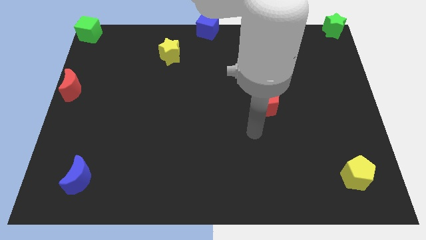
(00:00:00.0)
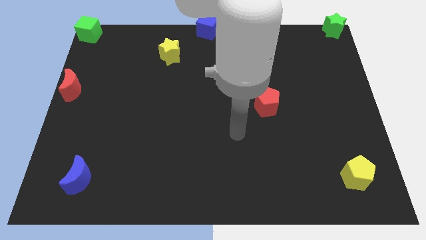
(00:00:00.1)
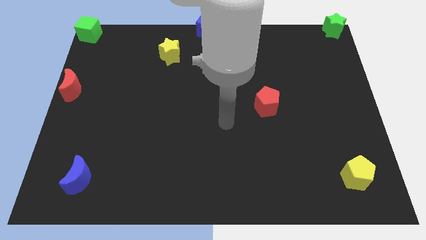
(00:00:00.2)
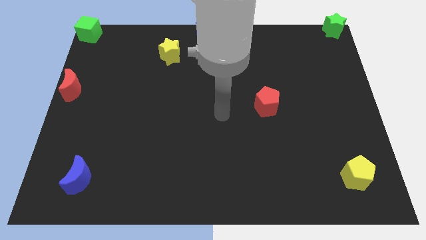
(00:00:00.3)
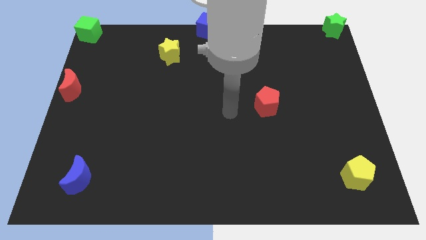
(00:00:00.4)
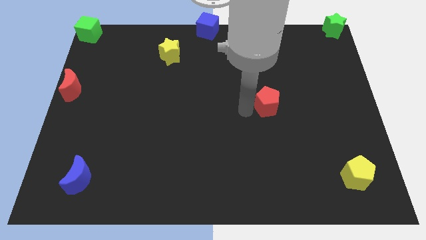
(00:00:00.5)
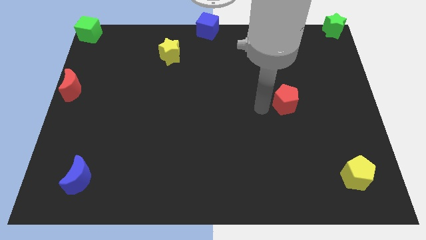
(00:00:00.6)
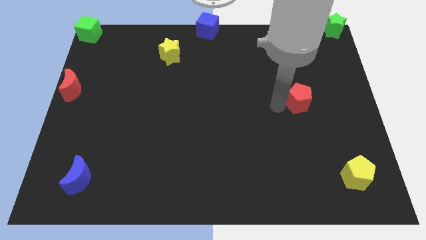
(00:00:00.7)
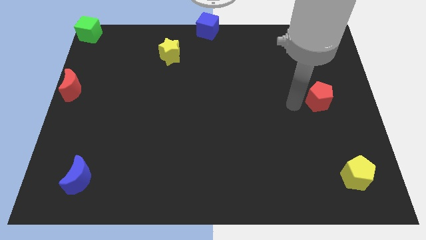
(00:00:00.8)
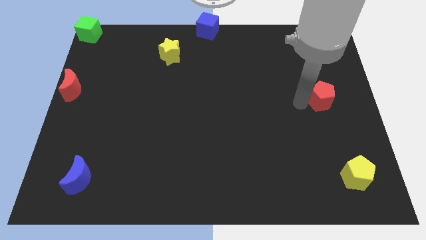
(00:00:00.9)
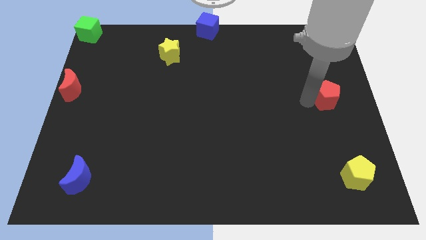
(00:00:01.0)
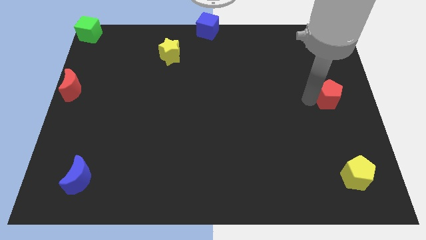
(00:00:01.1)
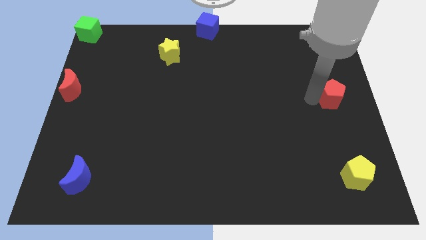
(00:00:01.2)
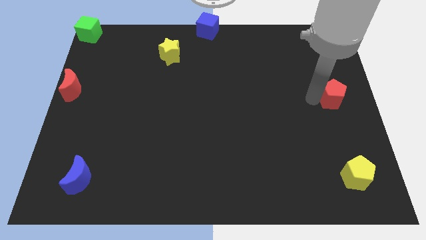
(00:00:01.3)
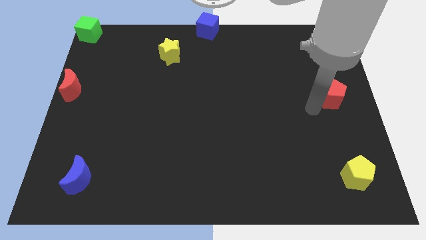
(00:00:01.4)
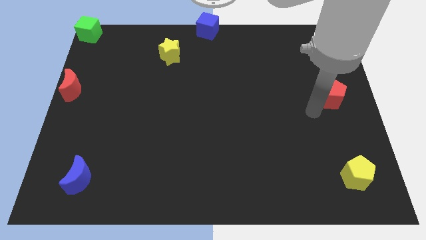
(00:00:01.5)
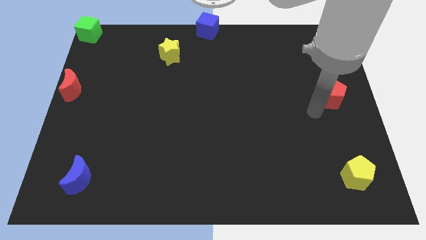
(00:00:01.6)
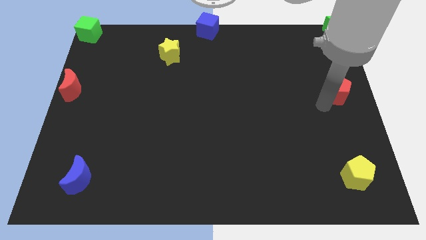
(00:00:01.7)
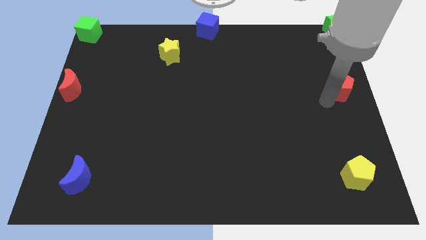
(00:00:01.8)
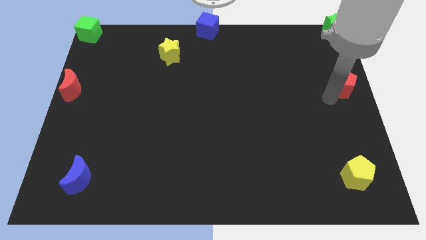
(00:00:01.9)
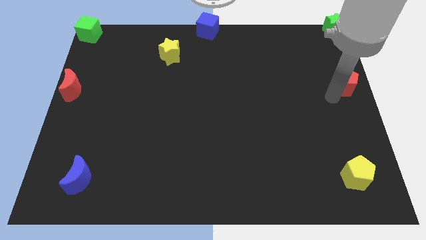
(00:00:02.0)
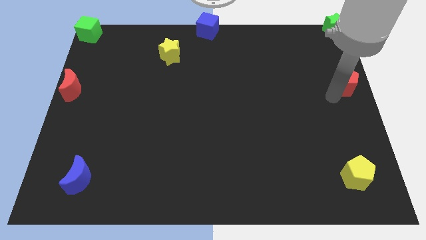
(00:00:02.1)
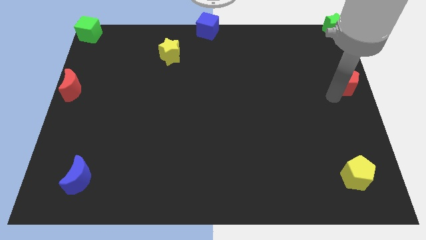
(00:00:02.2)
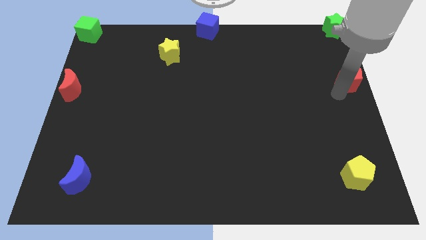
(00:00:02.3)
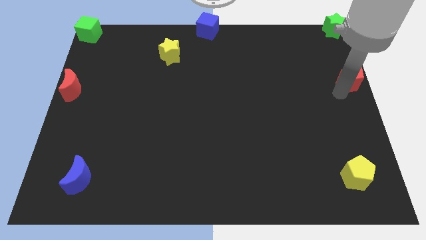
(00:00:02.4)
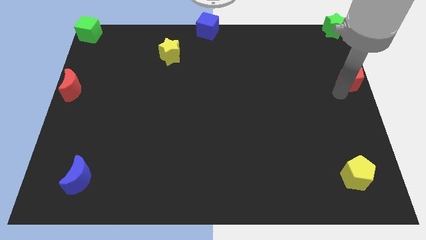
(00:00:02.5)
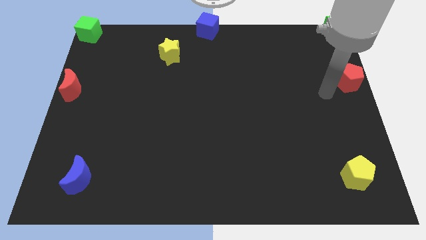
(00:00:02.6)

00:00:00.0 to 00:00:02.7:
push the red pentagon to the right center of the board

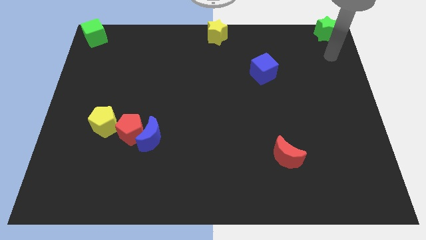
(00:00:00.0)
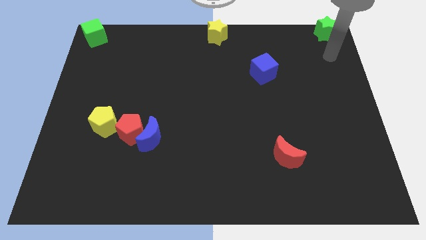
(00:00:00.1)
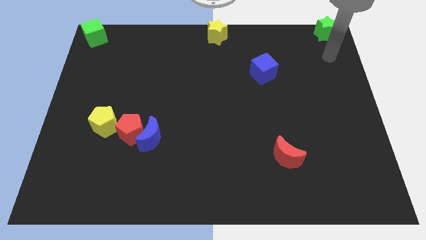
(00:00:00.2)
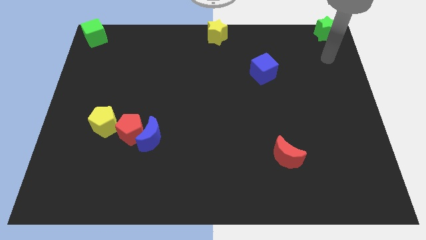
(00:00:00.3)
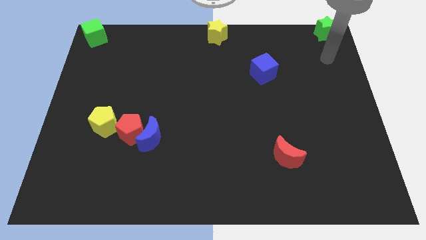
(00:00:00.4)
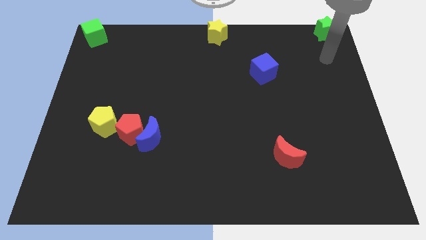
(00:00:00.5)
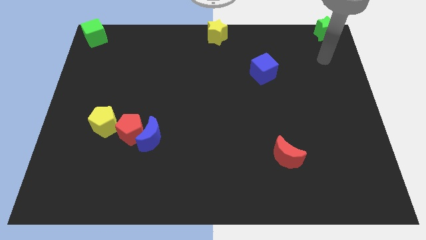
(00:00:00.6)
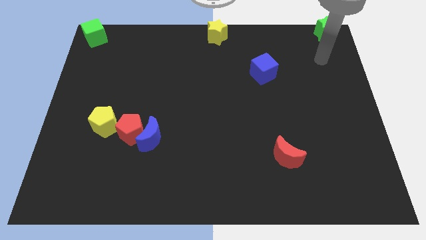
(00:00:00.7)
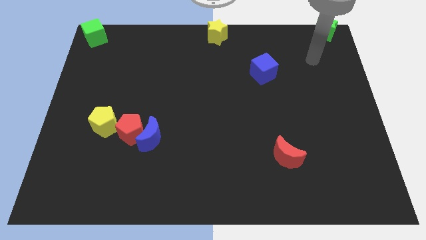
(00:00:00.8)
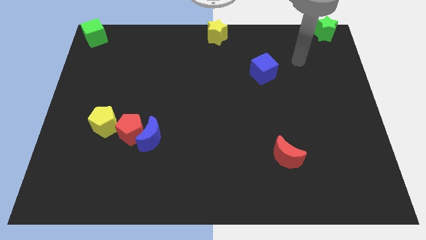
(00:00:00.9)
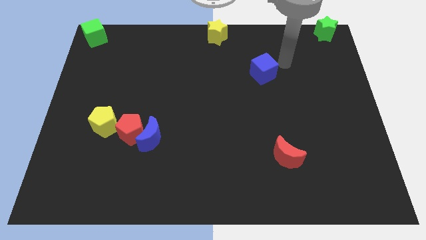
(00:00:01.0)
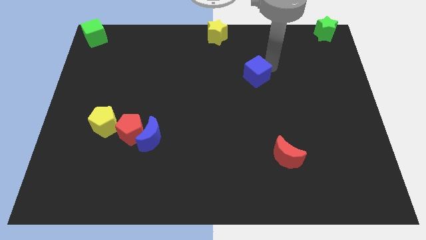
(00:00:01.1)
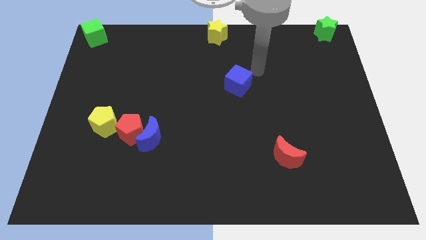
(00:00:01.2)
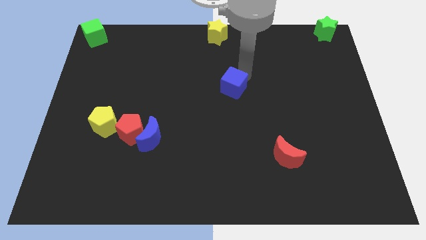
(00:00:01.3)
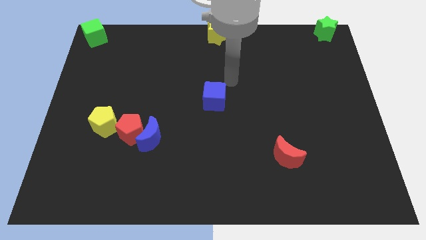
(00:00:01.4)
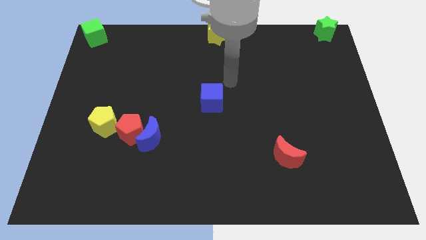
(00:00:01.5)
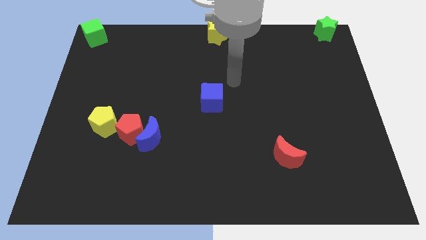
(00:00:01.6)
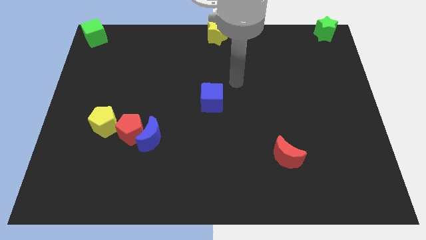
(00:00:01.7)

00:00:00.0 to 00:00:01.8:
push the blue cube at the center of the board

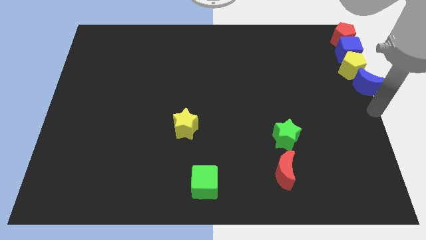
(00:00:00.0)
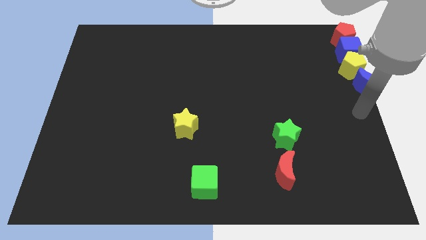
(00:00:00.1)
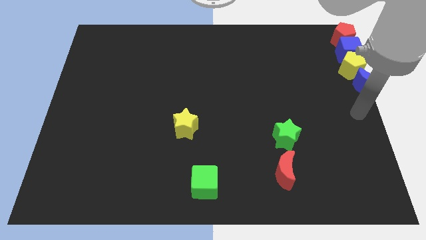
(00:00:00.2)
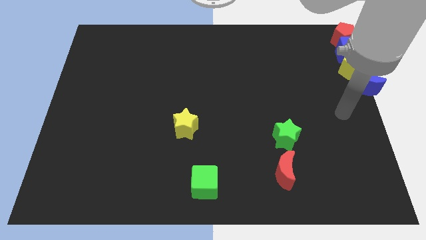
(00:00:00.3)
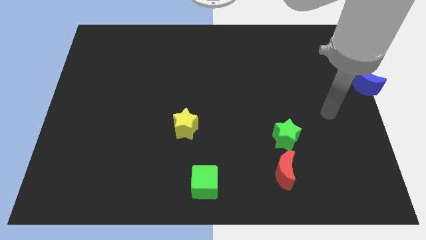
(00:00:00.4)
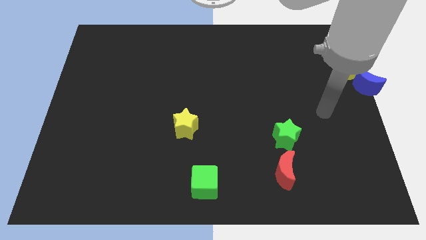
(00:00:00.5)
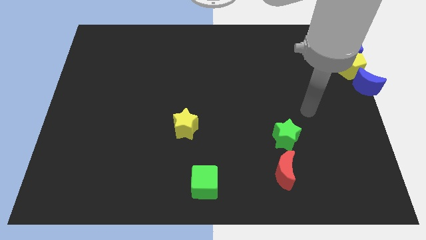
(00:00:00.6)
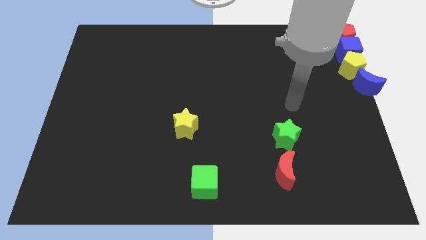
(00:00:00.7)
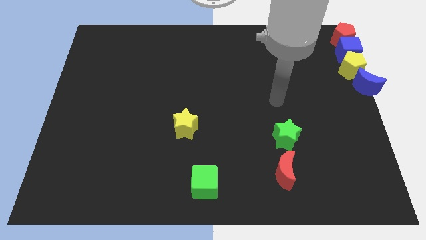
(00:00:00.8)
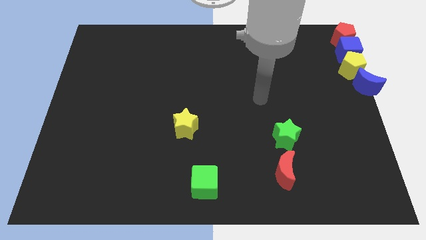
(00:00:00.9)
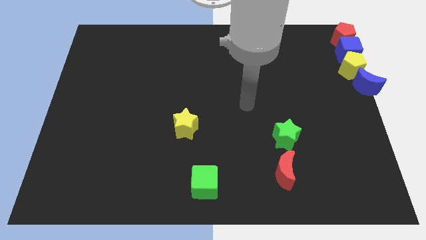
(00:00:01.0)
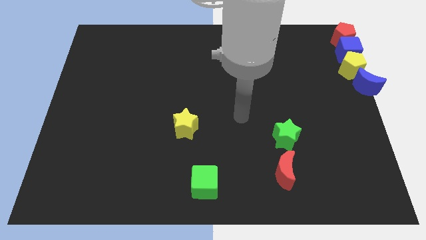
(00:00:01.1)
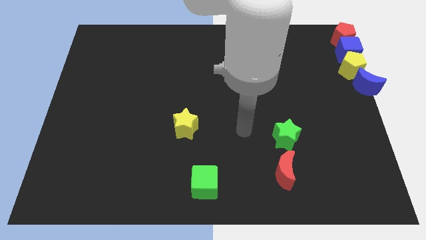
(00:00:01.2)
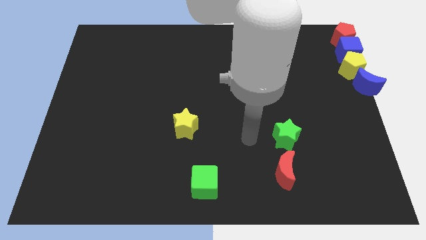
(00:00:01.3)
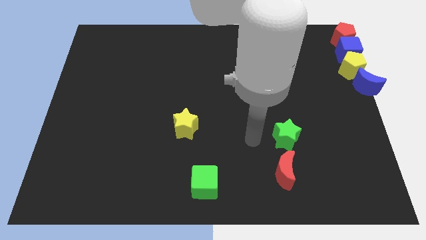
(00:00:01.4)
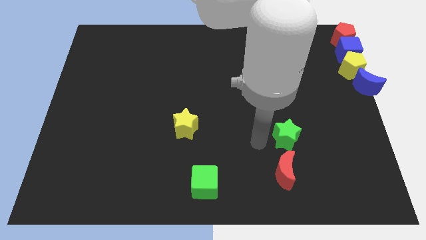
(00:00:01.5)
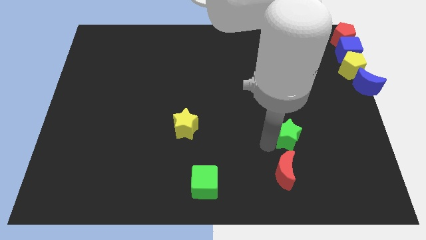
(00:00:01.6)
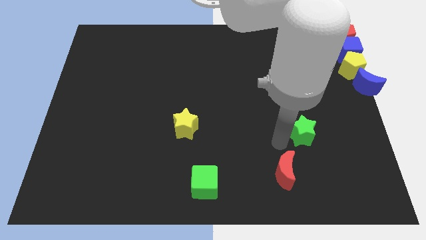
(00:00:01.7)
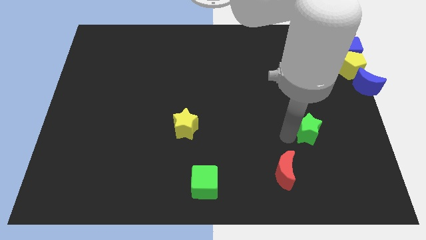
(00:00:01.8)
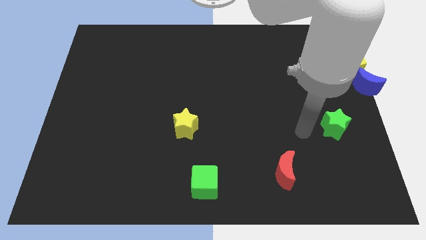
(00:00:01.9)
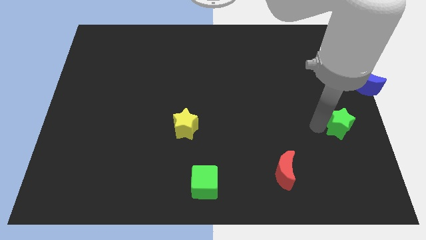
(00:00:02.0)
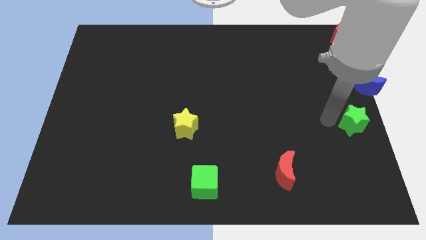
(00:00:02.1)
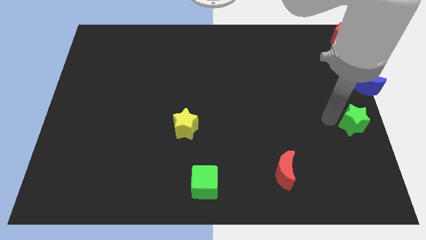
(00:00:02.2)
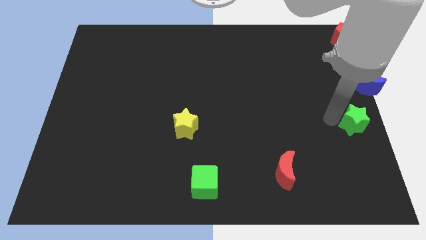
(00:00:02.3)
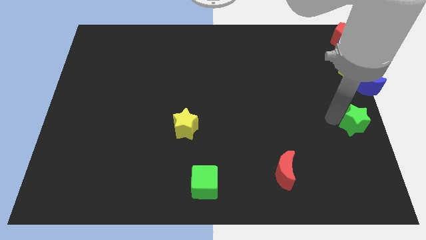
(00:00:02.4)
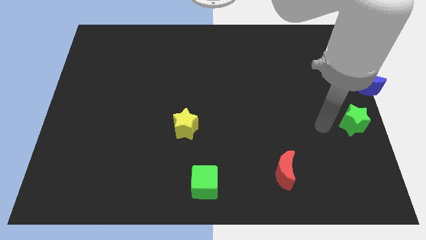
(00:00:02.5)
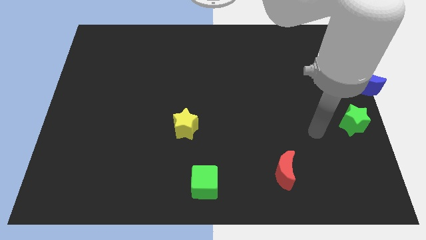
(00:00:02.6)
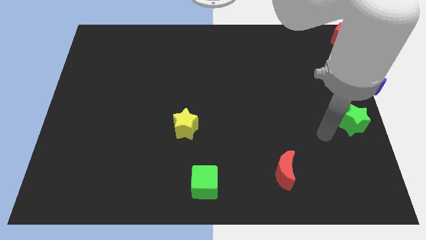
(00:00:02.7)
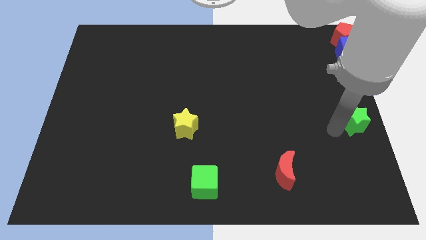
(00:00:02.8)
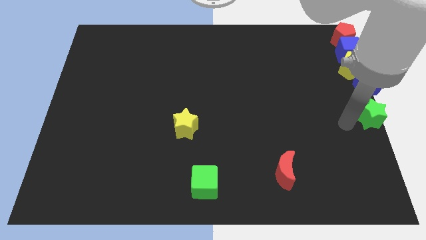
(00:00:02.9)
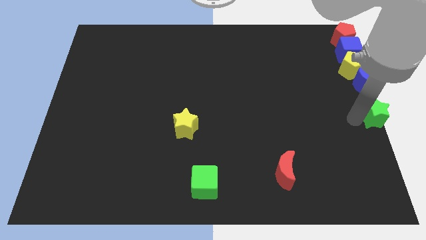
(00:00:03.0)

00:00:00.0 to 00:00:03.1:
slide the green star to the right center of the board

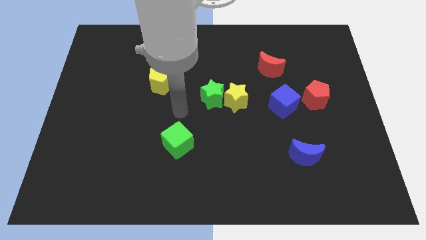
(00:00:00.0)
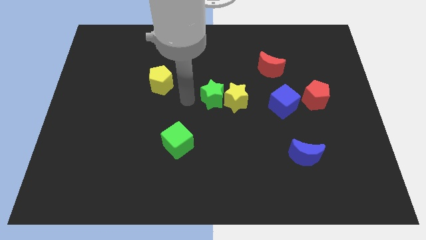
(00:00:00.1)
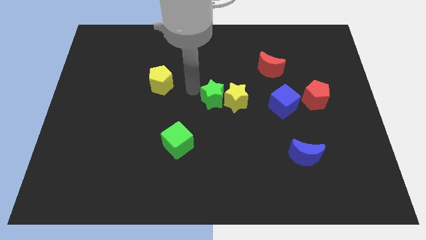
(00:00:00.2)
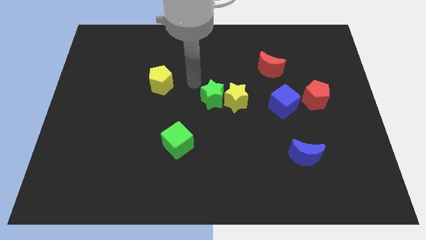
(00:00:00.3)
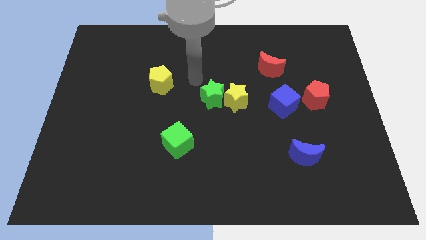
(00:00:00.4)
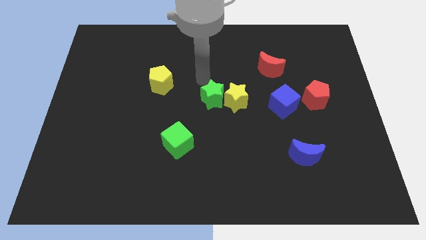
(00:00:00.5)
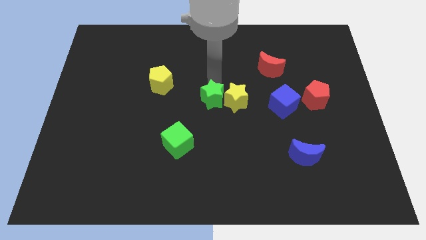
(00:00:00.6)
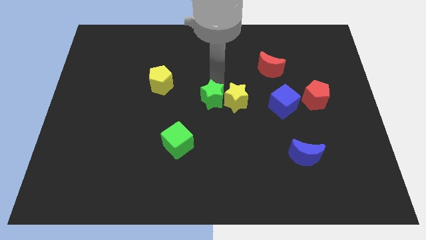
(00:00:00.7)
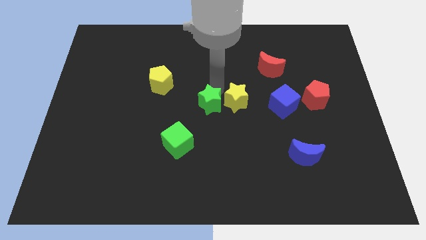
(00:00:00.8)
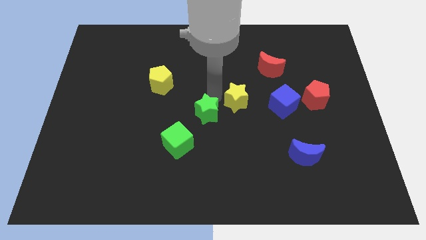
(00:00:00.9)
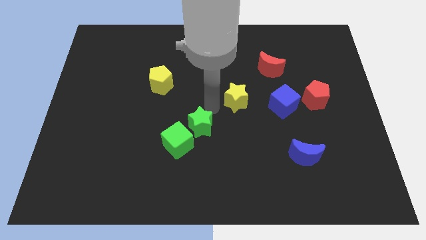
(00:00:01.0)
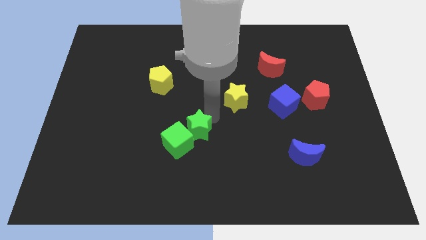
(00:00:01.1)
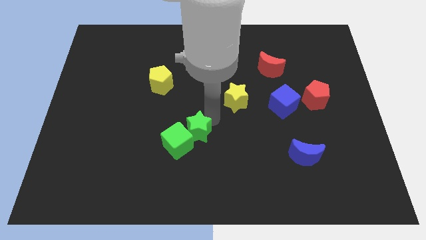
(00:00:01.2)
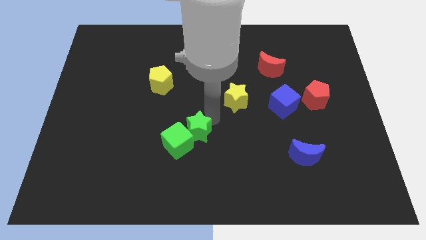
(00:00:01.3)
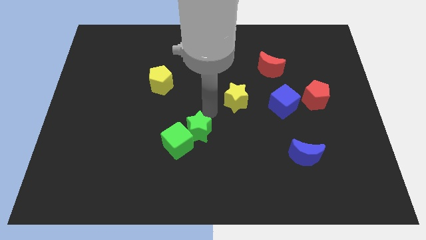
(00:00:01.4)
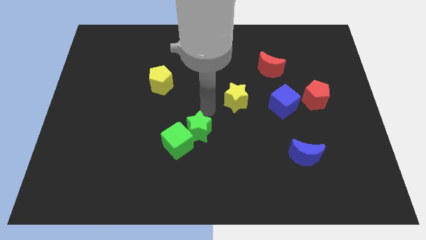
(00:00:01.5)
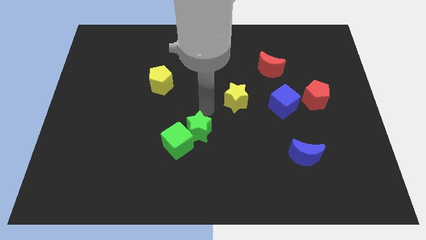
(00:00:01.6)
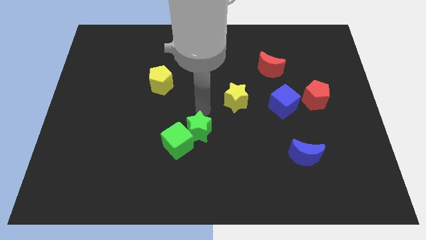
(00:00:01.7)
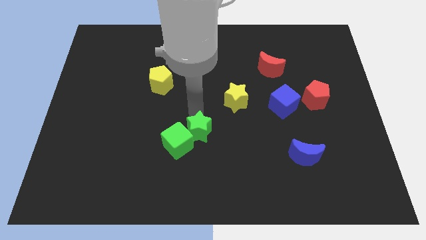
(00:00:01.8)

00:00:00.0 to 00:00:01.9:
push the green star into the green cube
